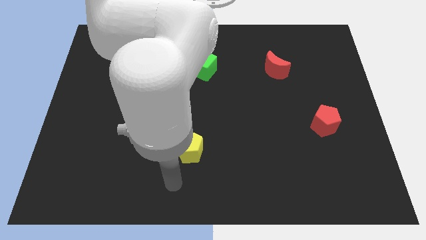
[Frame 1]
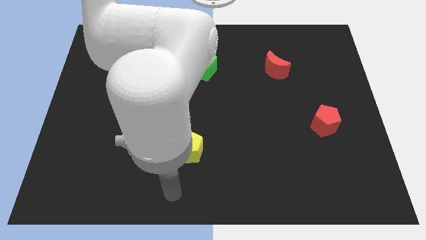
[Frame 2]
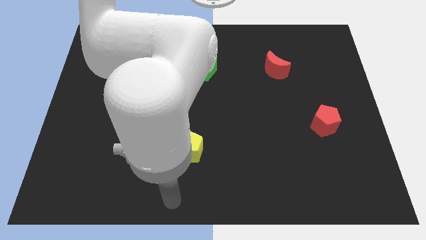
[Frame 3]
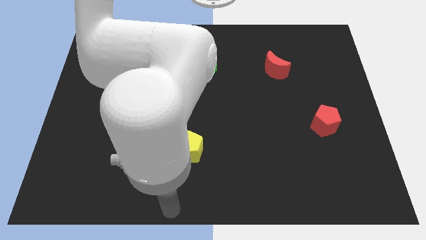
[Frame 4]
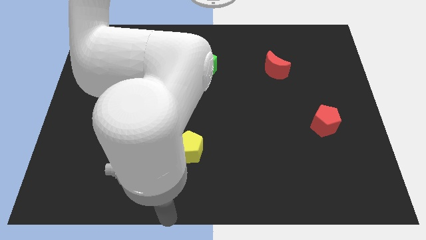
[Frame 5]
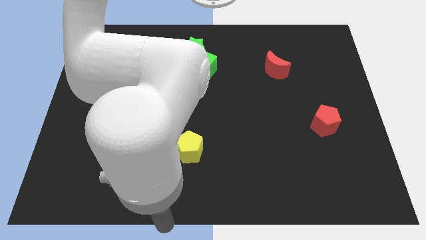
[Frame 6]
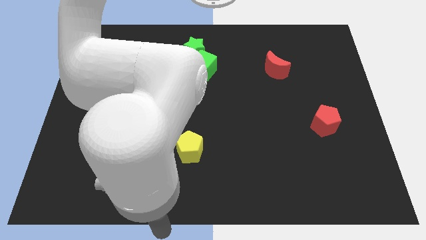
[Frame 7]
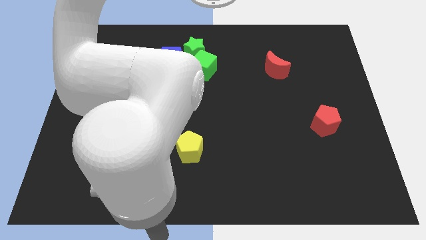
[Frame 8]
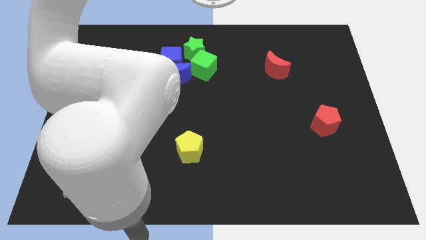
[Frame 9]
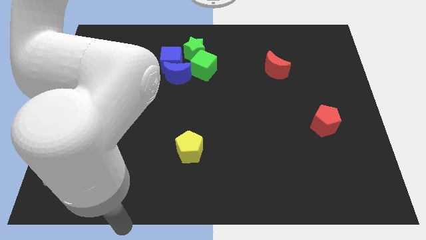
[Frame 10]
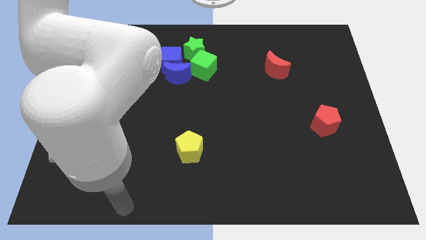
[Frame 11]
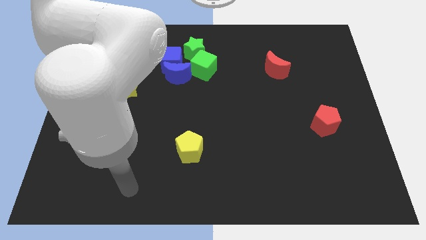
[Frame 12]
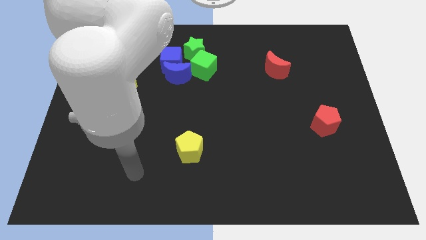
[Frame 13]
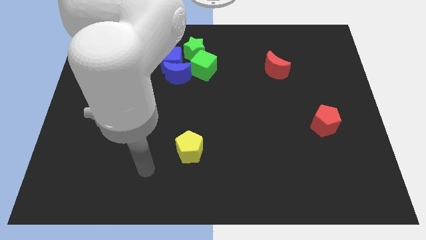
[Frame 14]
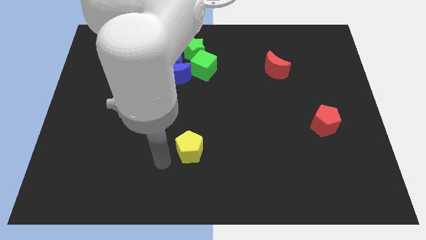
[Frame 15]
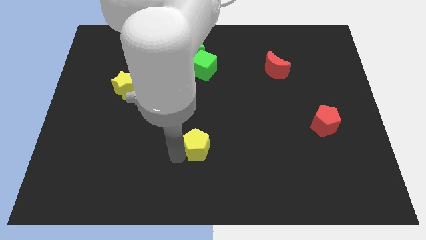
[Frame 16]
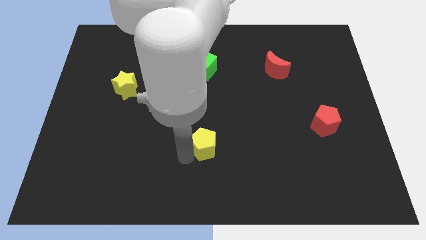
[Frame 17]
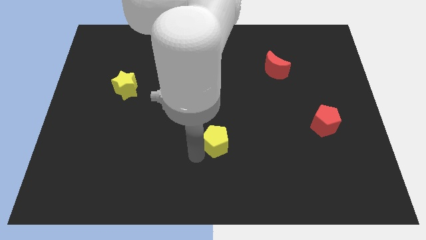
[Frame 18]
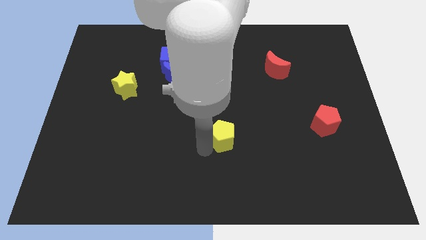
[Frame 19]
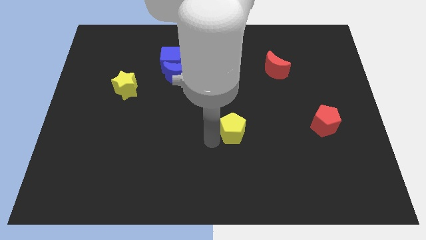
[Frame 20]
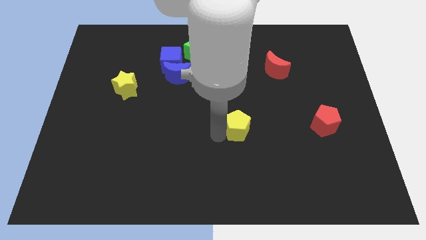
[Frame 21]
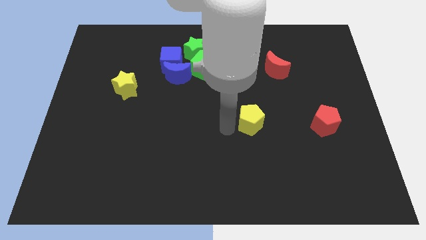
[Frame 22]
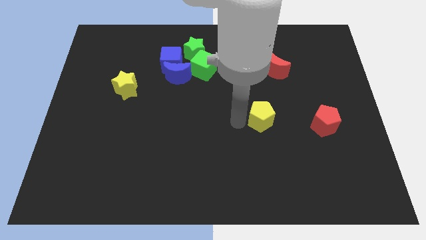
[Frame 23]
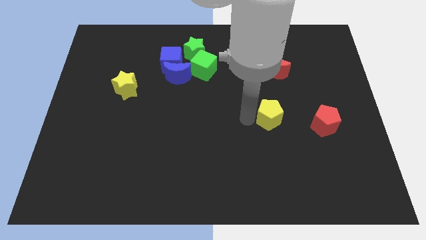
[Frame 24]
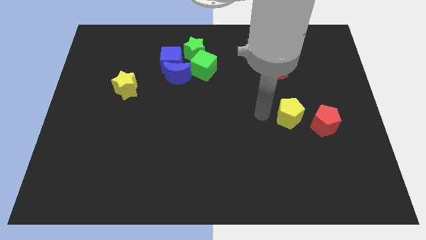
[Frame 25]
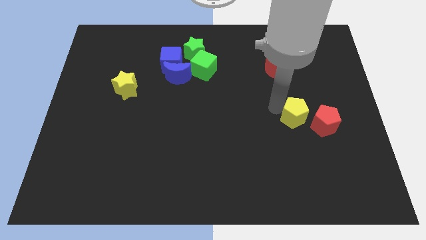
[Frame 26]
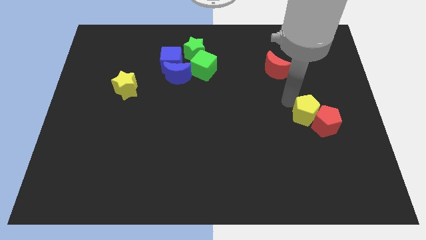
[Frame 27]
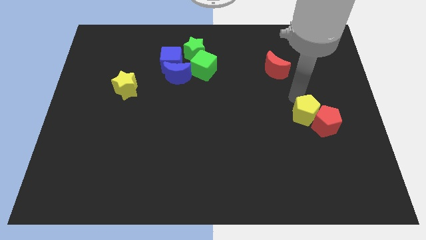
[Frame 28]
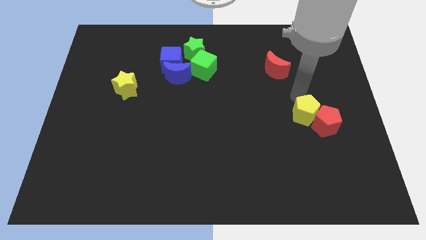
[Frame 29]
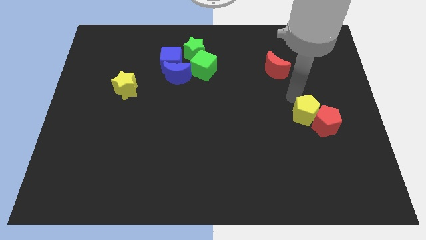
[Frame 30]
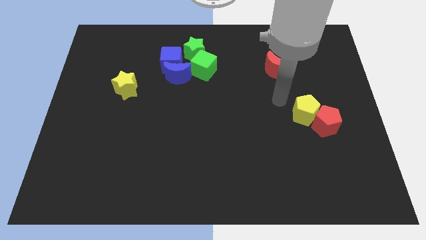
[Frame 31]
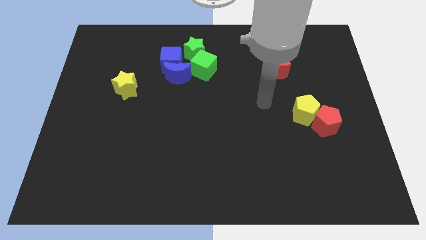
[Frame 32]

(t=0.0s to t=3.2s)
move the yellow pentagon into the red pentagon

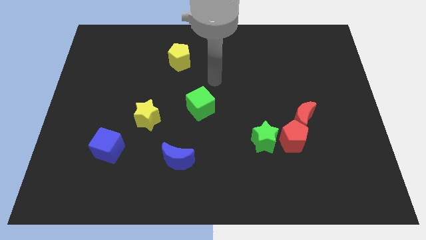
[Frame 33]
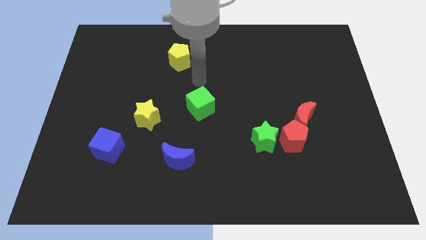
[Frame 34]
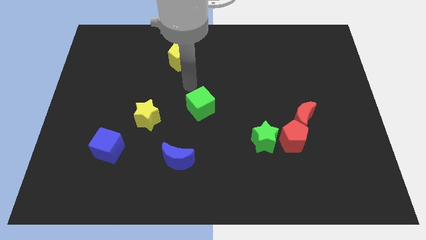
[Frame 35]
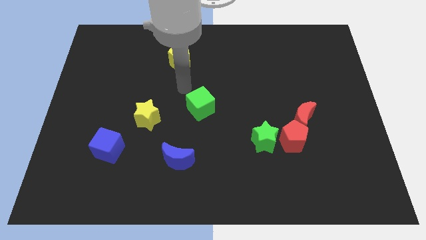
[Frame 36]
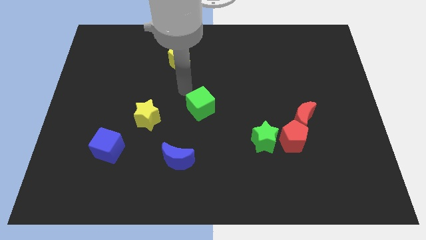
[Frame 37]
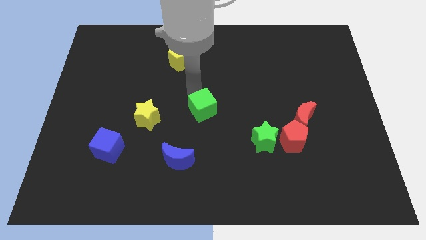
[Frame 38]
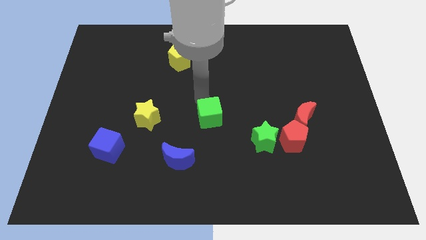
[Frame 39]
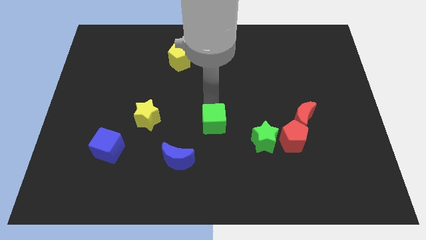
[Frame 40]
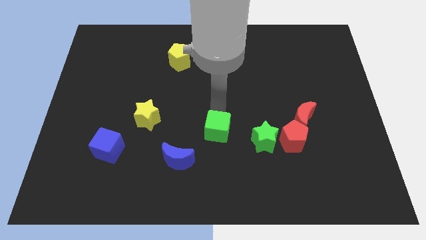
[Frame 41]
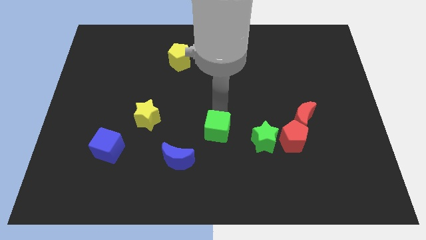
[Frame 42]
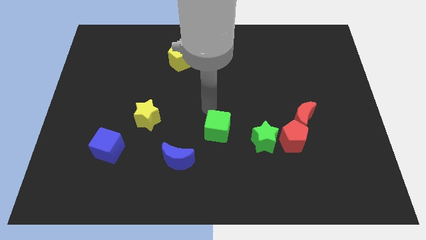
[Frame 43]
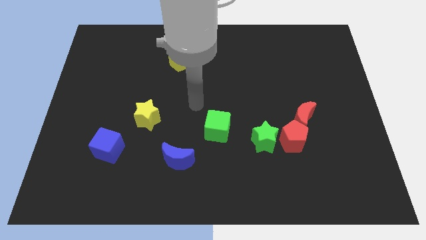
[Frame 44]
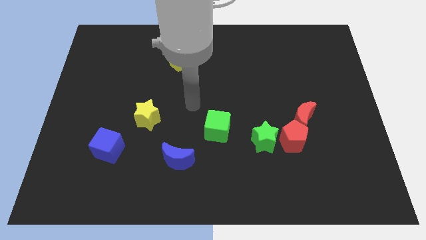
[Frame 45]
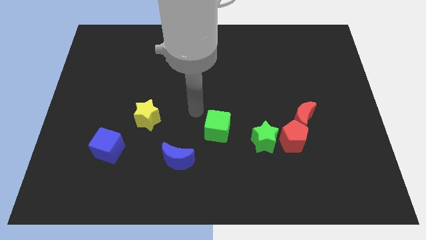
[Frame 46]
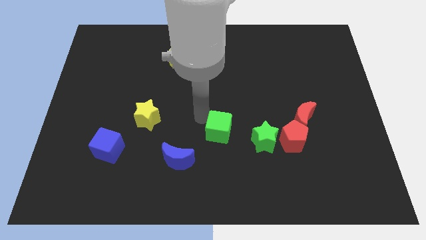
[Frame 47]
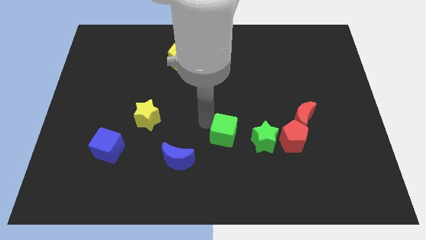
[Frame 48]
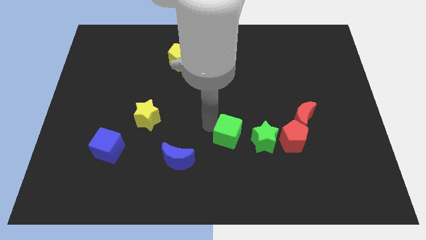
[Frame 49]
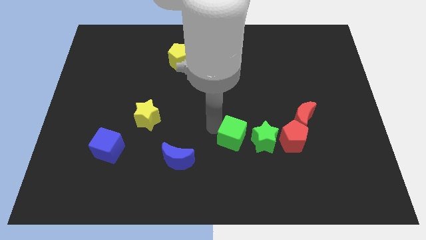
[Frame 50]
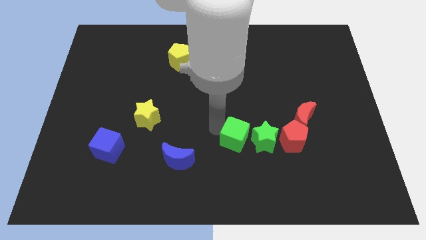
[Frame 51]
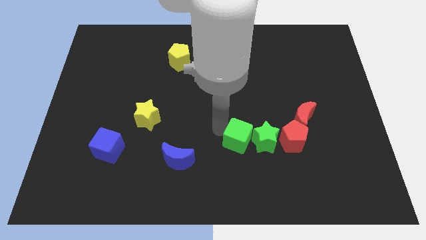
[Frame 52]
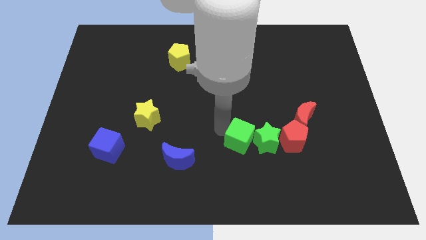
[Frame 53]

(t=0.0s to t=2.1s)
push the green cube to the left of green star

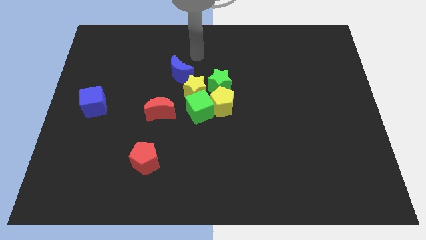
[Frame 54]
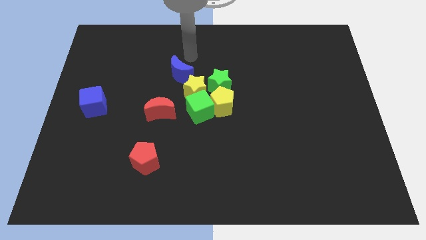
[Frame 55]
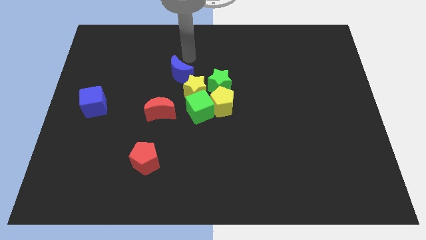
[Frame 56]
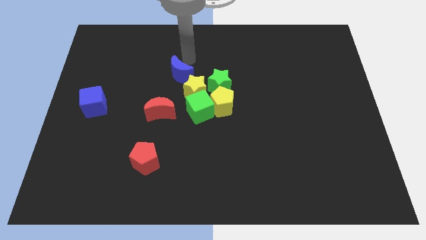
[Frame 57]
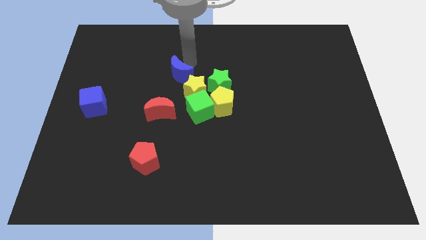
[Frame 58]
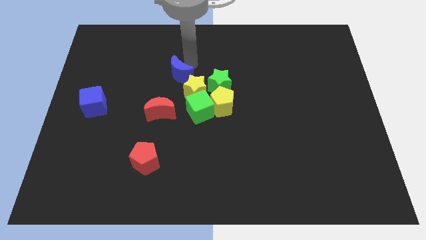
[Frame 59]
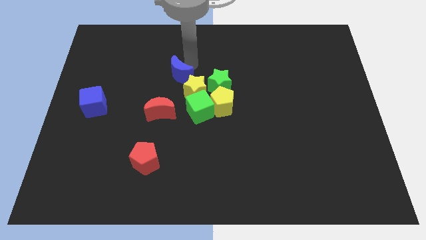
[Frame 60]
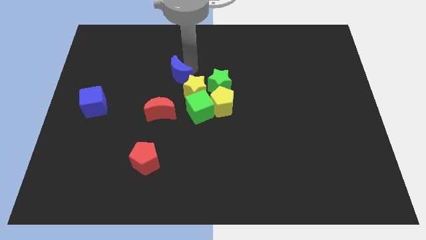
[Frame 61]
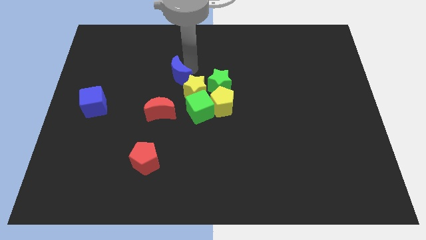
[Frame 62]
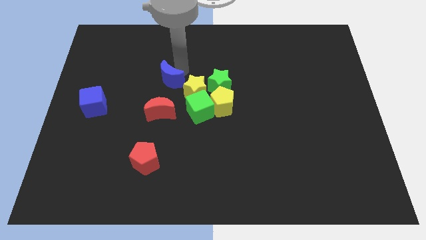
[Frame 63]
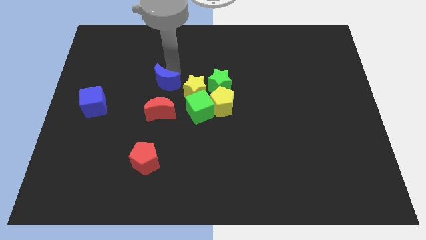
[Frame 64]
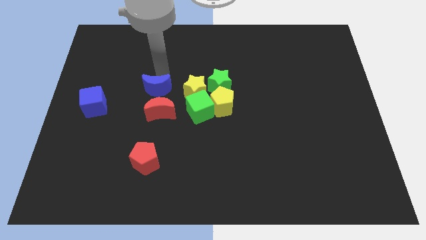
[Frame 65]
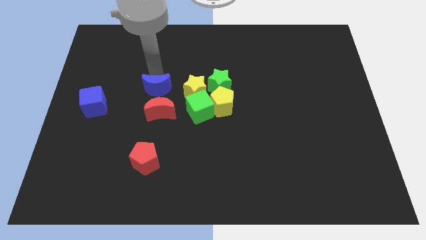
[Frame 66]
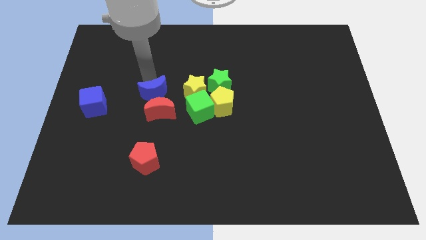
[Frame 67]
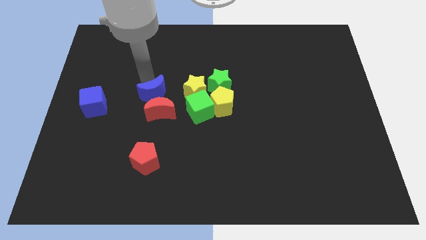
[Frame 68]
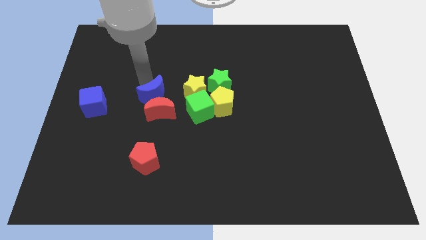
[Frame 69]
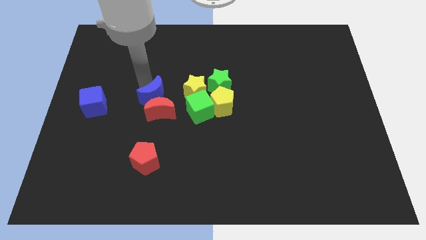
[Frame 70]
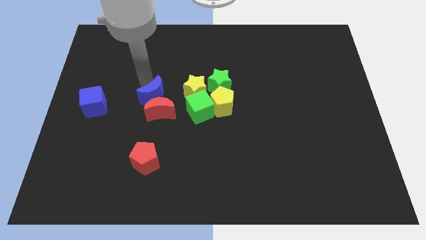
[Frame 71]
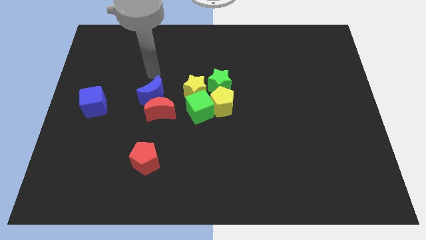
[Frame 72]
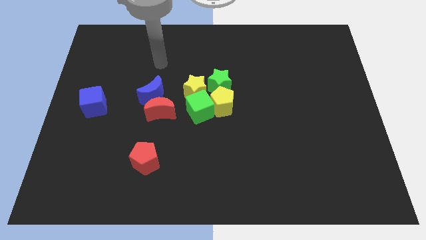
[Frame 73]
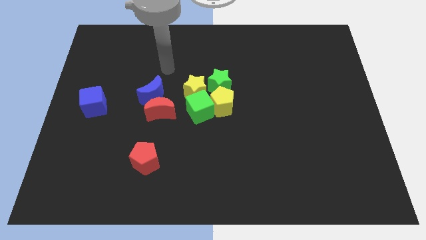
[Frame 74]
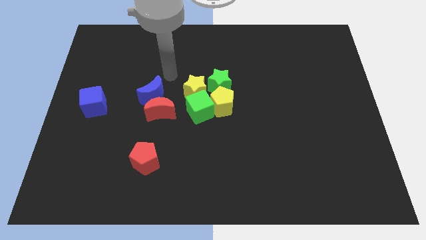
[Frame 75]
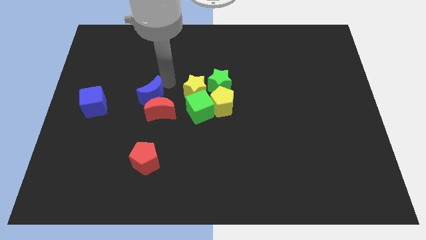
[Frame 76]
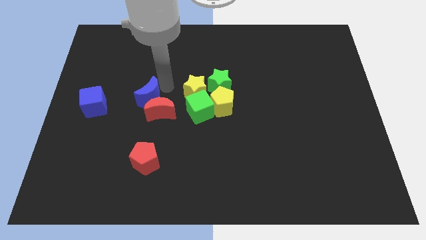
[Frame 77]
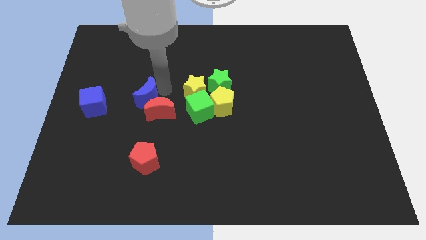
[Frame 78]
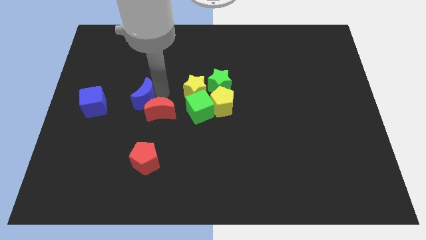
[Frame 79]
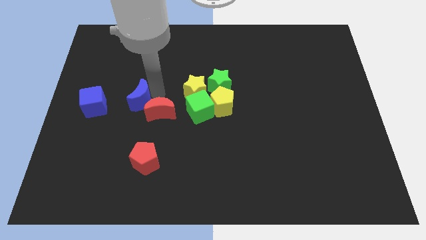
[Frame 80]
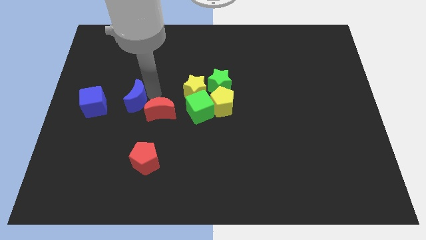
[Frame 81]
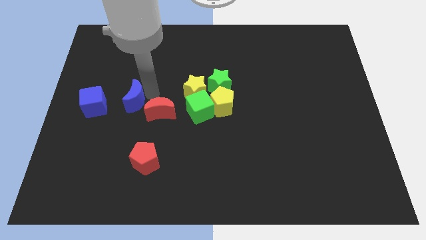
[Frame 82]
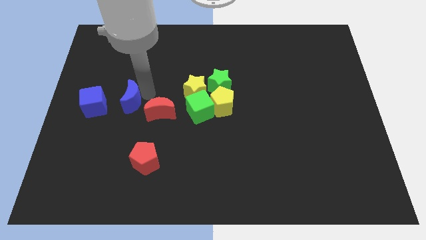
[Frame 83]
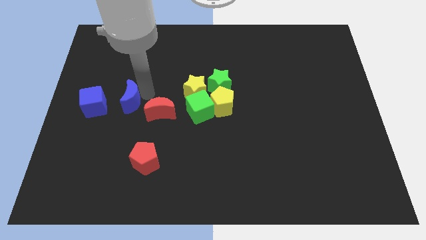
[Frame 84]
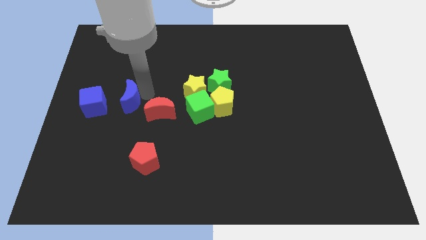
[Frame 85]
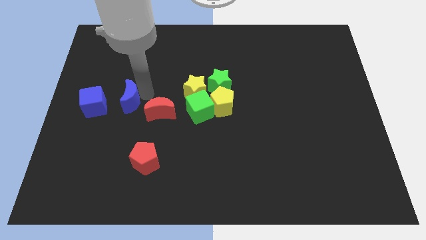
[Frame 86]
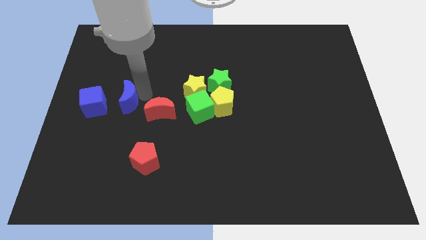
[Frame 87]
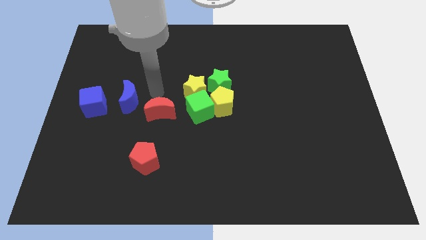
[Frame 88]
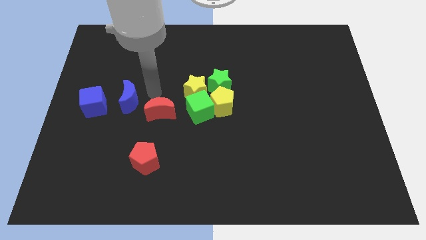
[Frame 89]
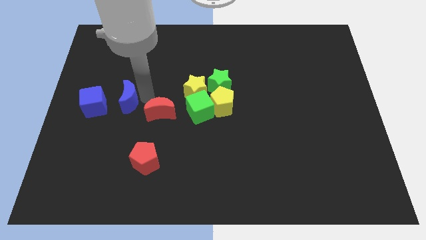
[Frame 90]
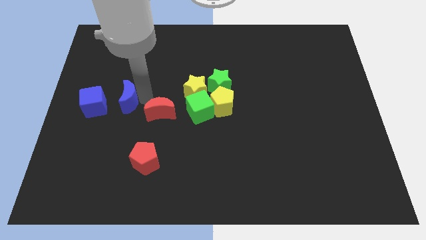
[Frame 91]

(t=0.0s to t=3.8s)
move the blue crescent towards the blue cube
